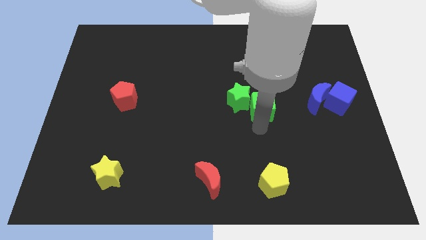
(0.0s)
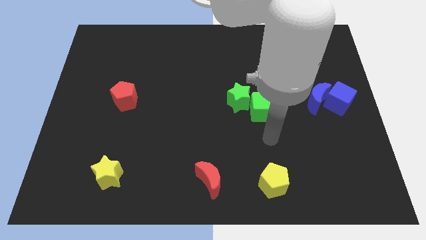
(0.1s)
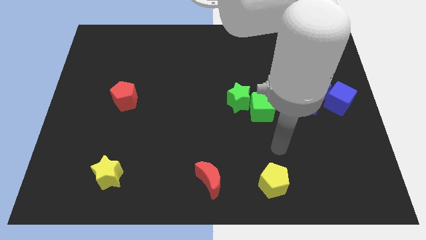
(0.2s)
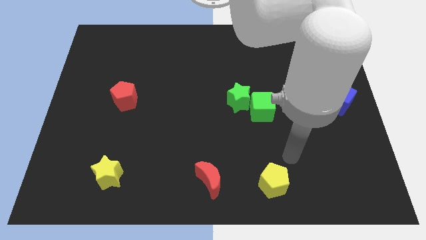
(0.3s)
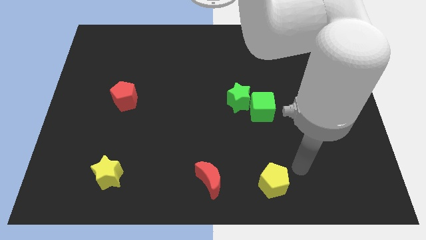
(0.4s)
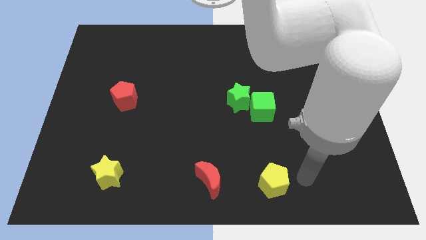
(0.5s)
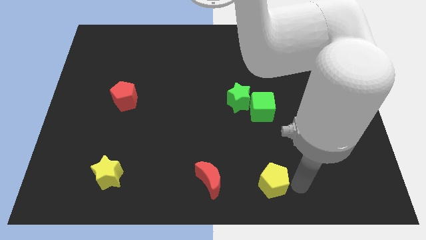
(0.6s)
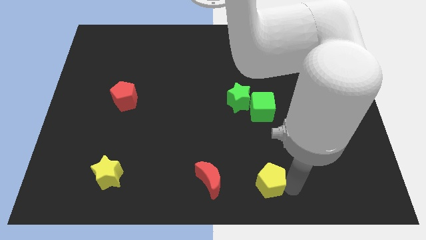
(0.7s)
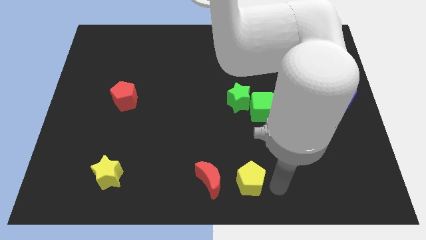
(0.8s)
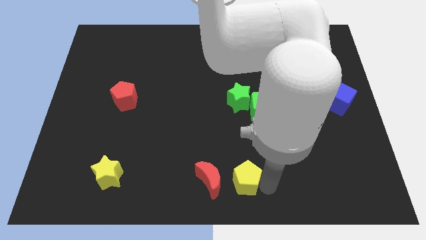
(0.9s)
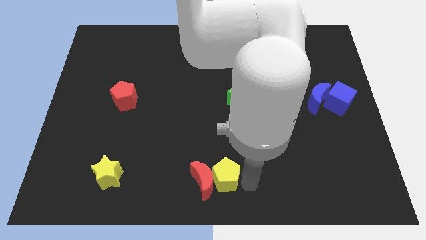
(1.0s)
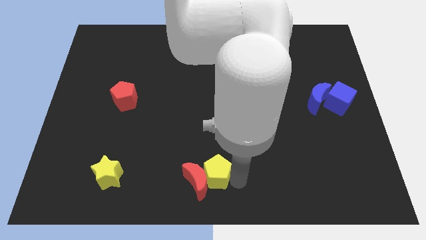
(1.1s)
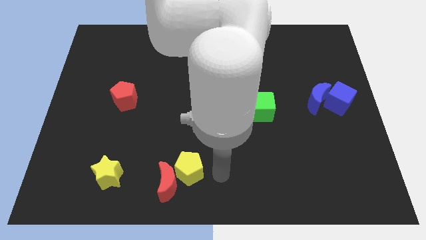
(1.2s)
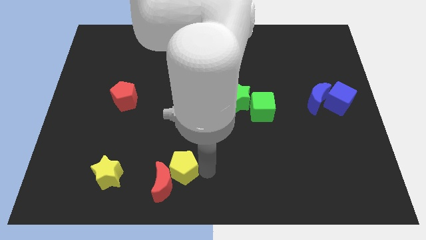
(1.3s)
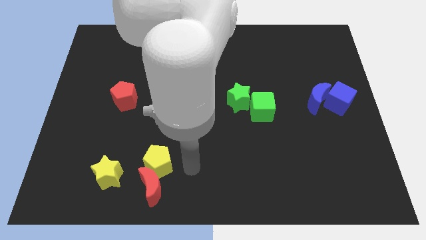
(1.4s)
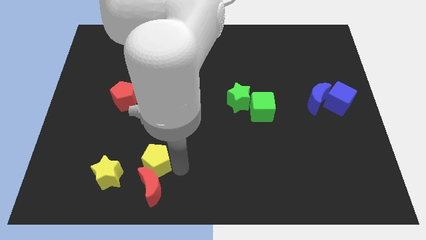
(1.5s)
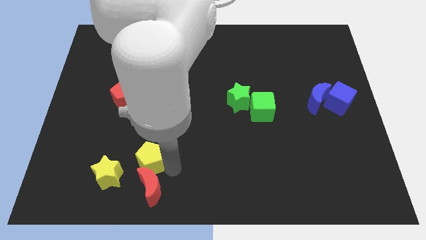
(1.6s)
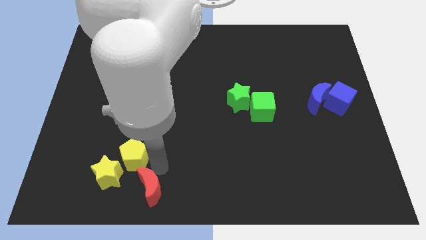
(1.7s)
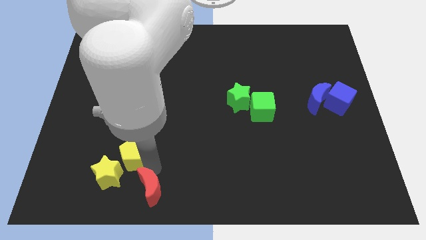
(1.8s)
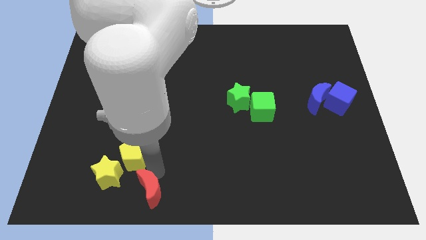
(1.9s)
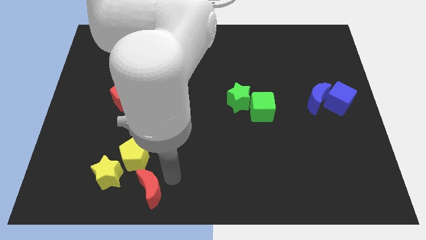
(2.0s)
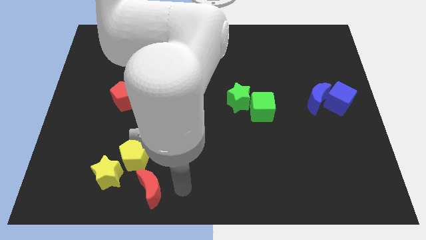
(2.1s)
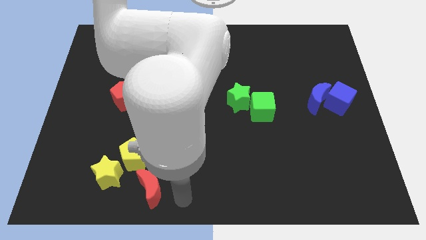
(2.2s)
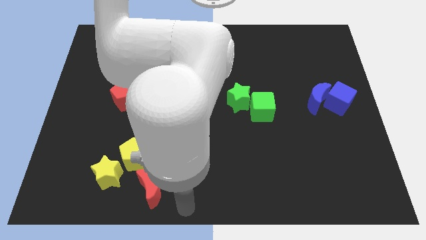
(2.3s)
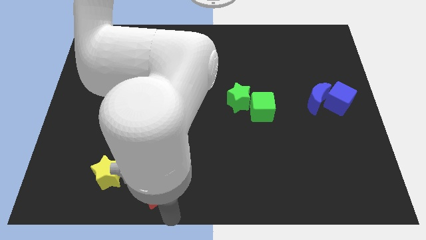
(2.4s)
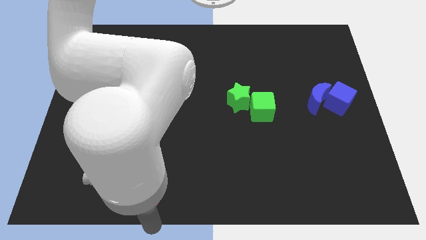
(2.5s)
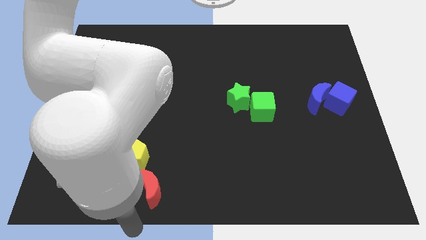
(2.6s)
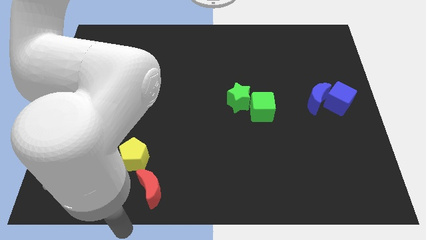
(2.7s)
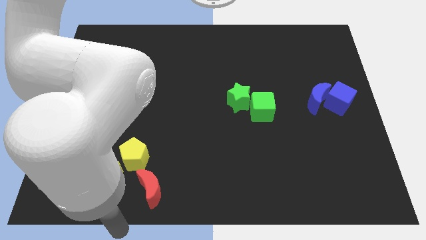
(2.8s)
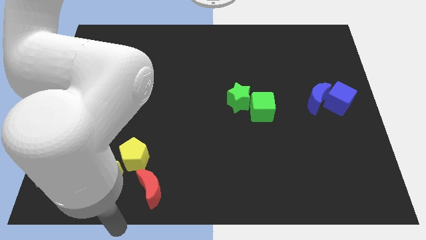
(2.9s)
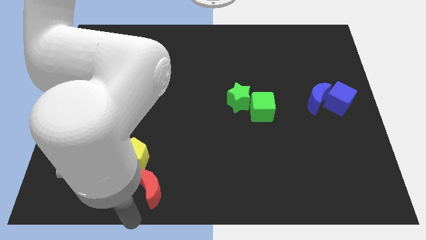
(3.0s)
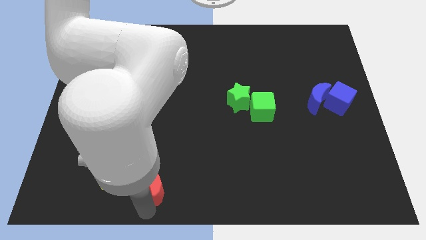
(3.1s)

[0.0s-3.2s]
move the red moon along with the yellow pentagon towards the bottom left

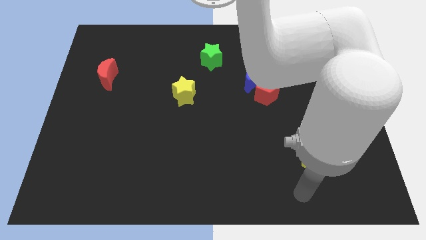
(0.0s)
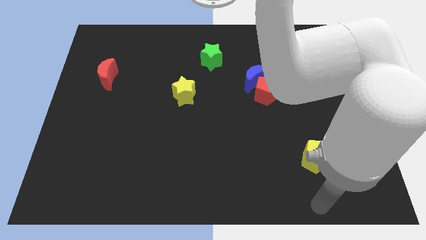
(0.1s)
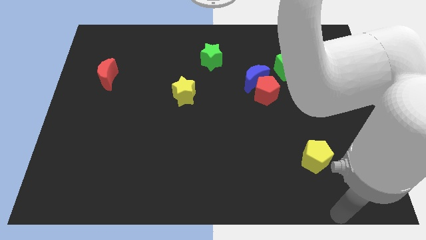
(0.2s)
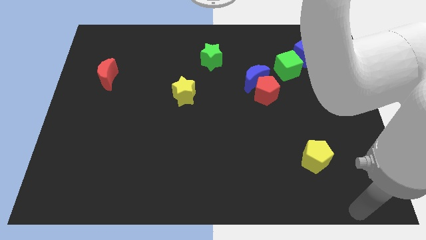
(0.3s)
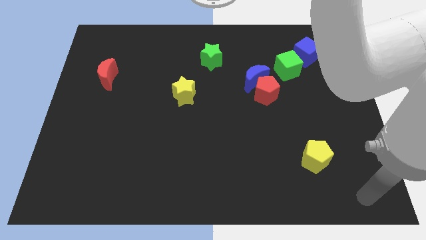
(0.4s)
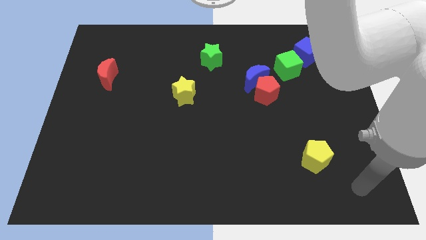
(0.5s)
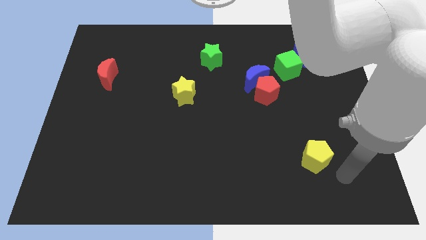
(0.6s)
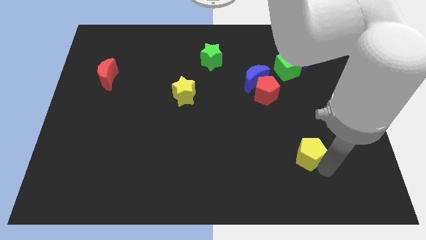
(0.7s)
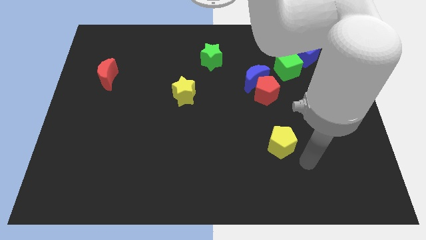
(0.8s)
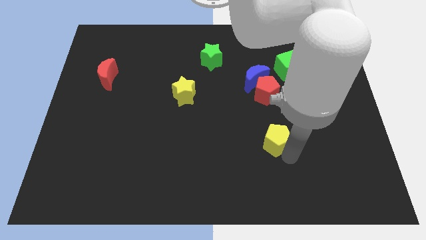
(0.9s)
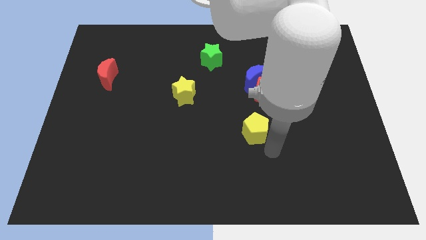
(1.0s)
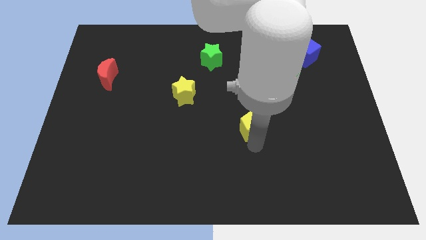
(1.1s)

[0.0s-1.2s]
push the yellow pentagon towards the bottom of the red pentagon

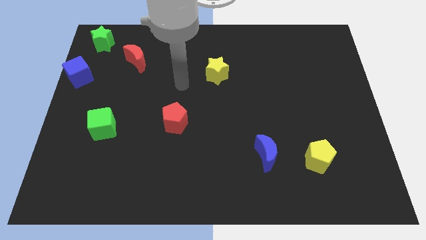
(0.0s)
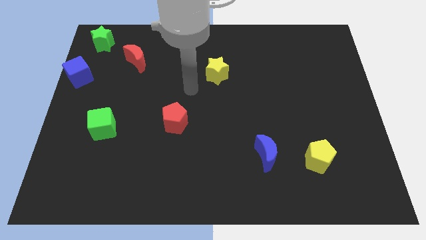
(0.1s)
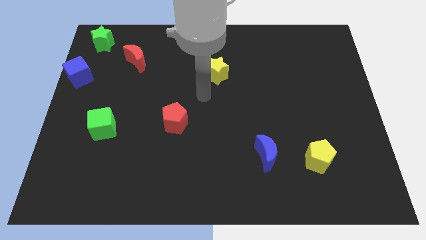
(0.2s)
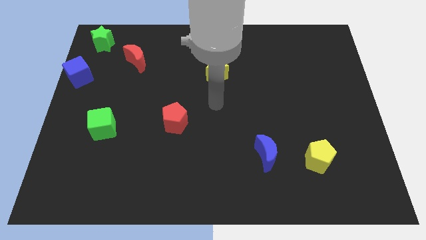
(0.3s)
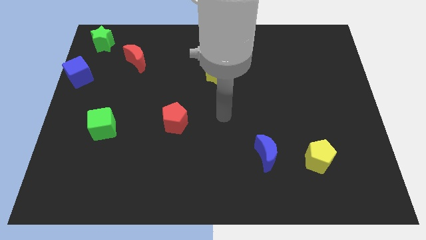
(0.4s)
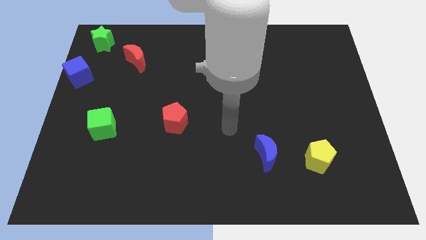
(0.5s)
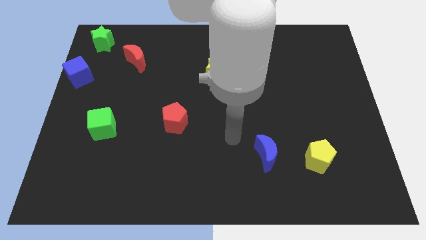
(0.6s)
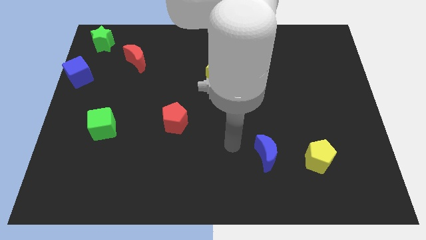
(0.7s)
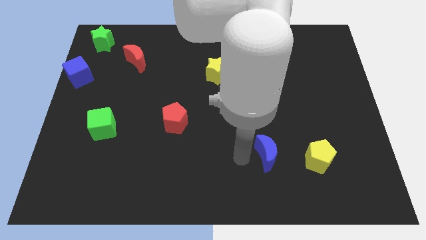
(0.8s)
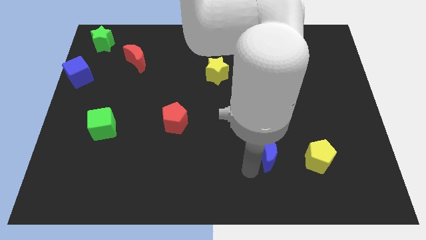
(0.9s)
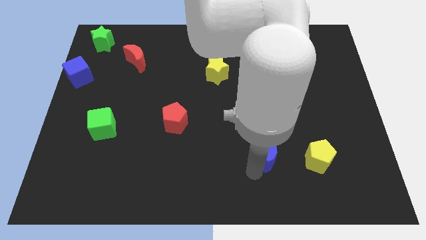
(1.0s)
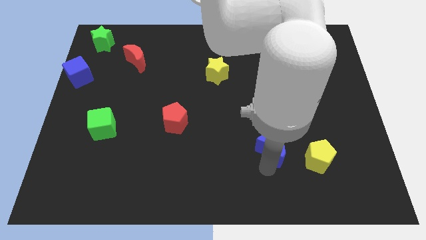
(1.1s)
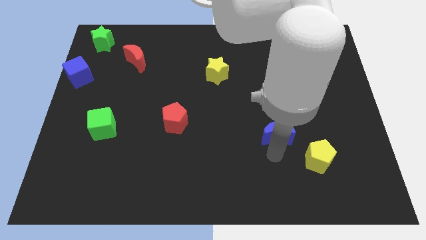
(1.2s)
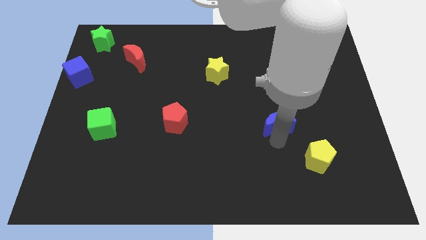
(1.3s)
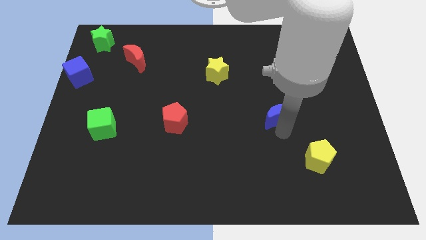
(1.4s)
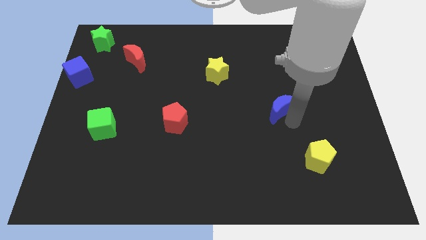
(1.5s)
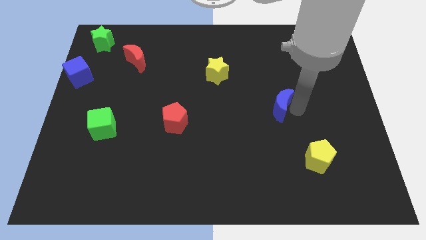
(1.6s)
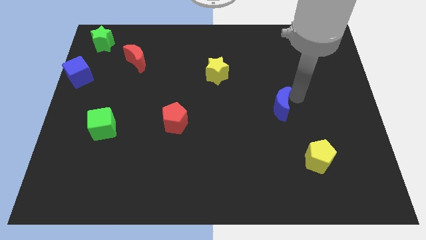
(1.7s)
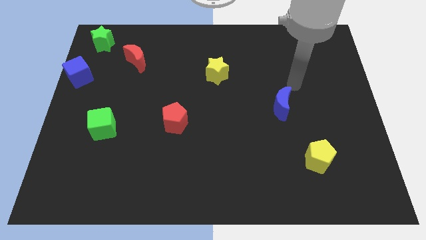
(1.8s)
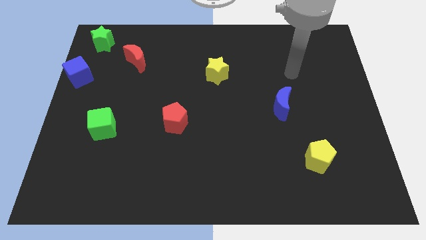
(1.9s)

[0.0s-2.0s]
place the blue moon between the yellow blocks

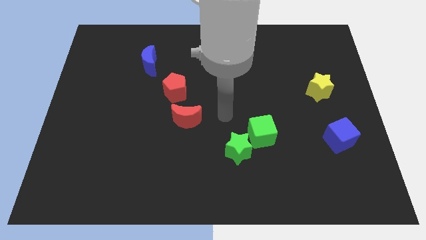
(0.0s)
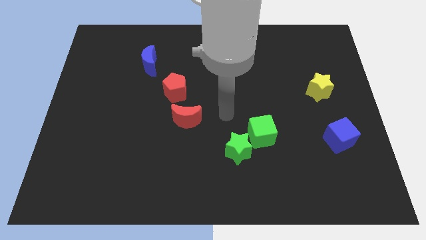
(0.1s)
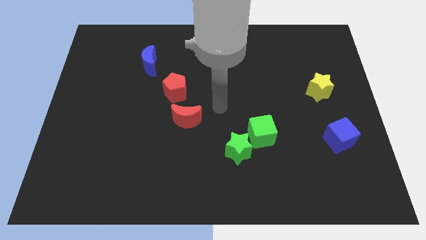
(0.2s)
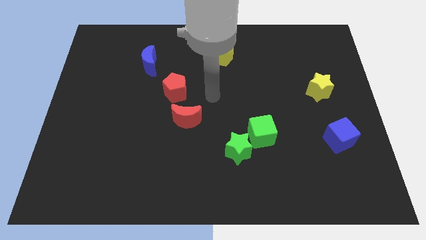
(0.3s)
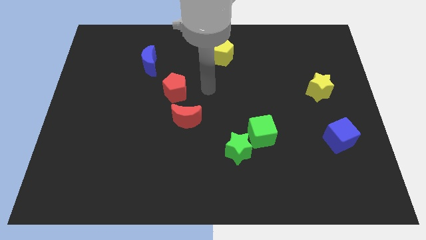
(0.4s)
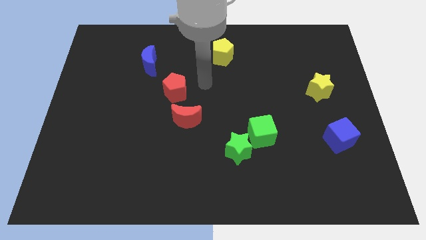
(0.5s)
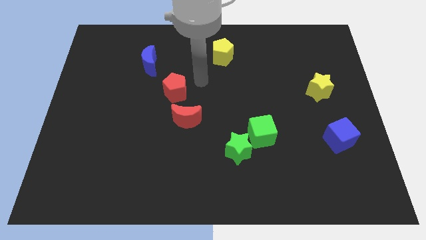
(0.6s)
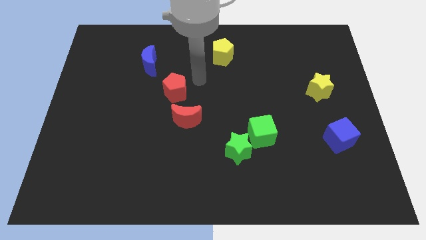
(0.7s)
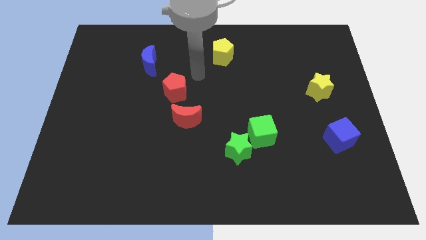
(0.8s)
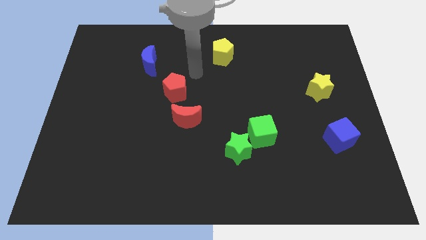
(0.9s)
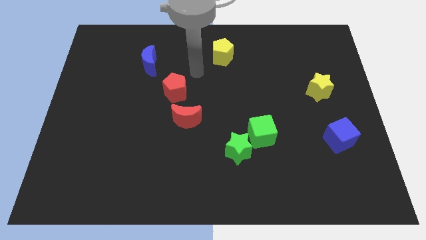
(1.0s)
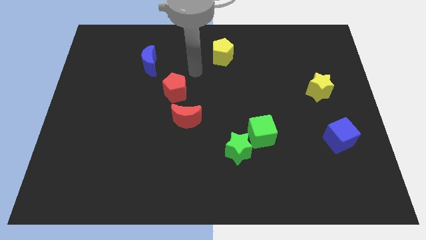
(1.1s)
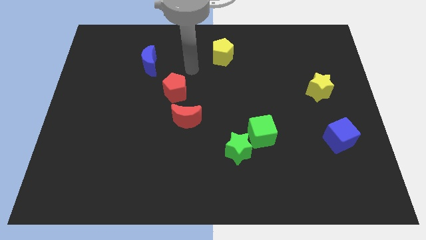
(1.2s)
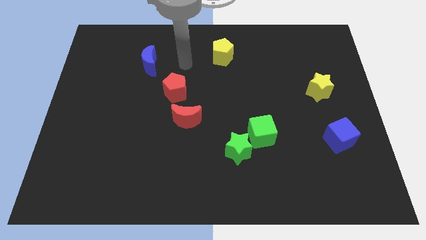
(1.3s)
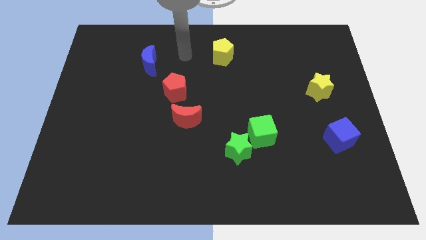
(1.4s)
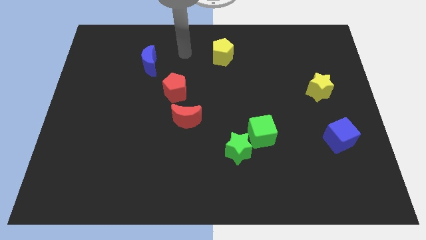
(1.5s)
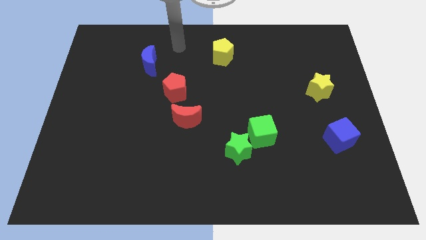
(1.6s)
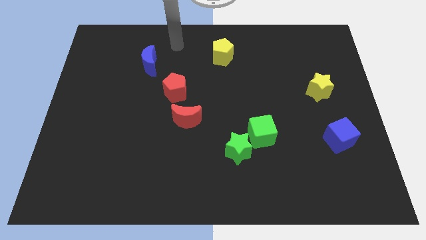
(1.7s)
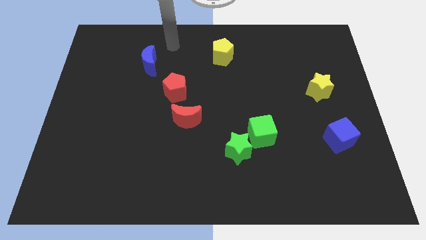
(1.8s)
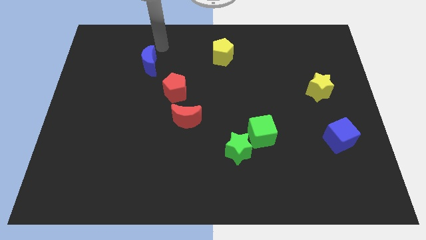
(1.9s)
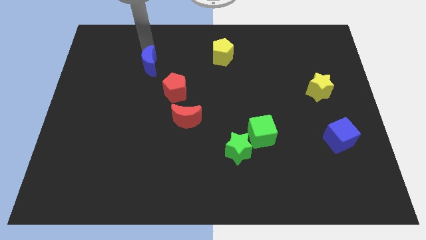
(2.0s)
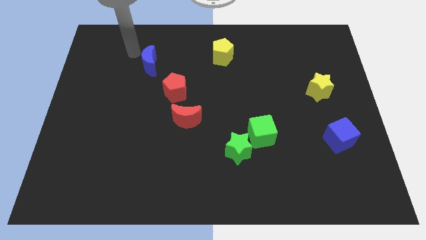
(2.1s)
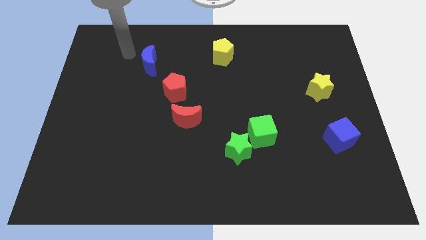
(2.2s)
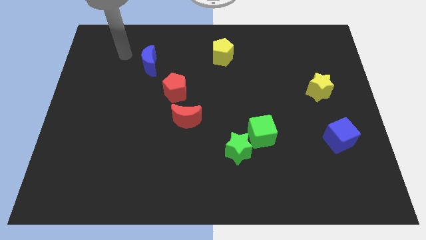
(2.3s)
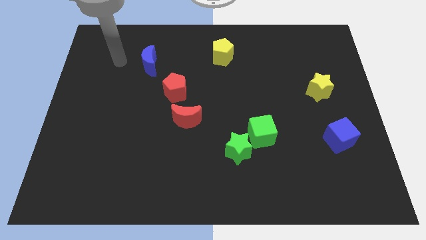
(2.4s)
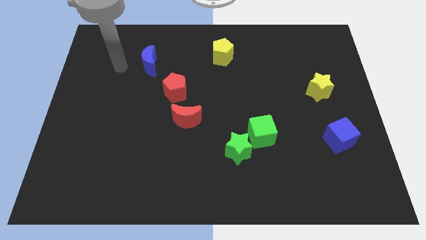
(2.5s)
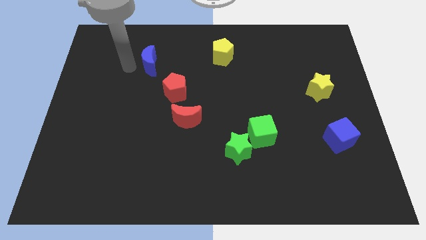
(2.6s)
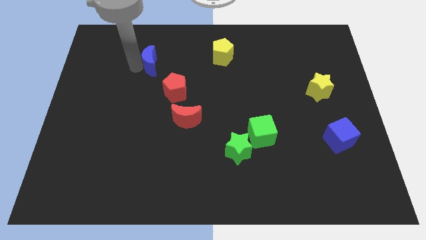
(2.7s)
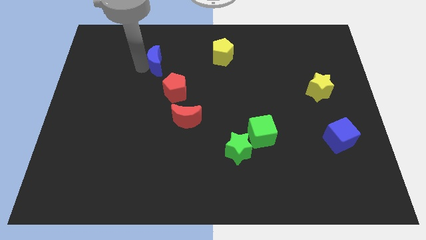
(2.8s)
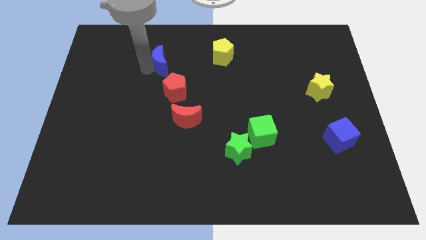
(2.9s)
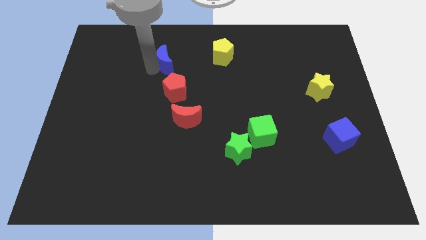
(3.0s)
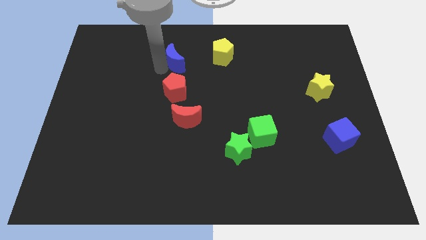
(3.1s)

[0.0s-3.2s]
push the blue crescent top to the red pentagon
